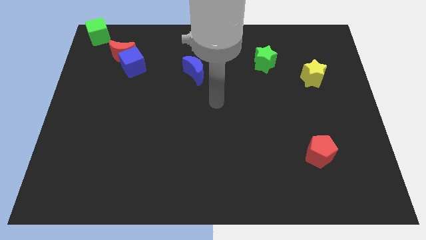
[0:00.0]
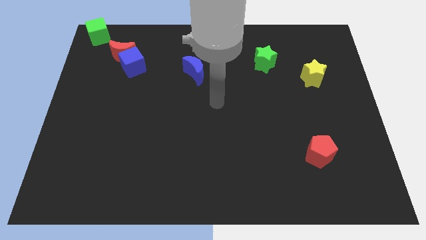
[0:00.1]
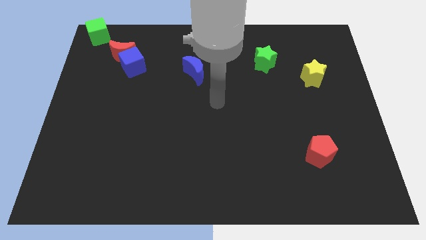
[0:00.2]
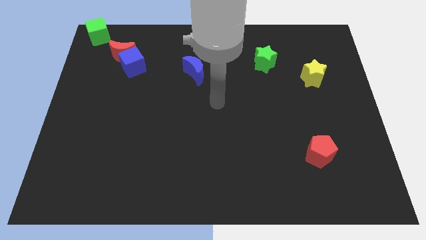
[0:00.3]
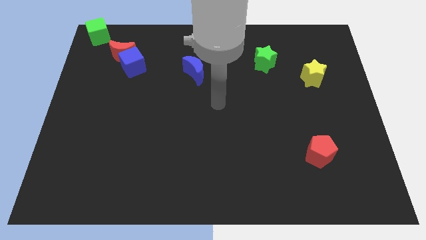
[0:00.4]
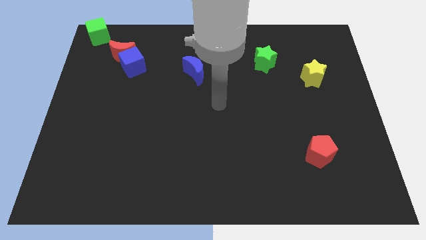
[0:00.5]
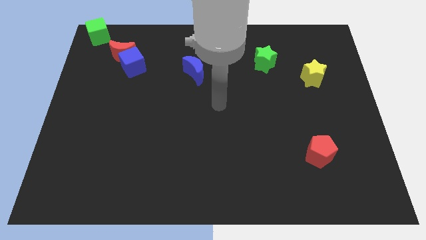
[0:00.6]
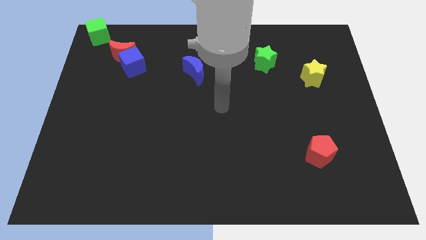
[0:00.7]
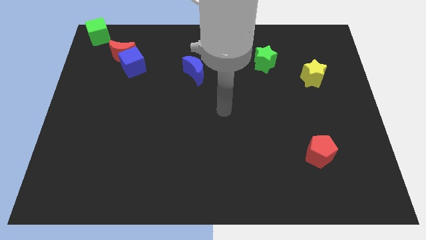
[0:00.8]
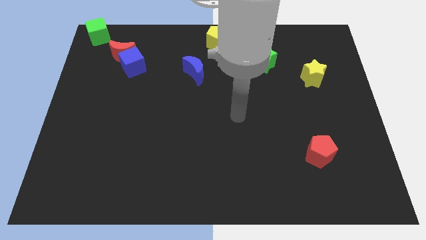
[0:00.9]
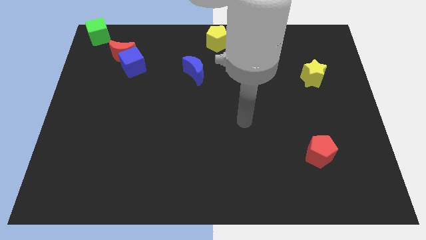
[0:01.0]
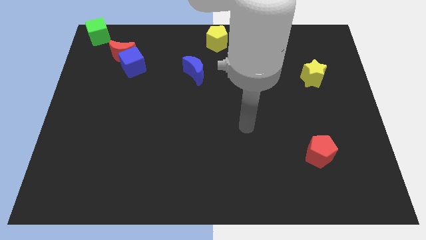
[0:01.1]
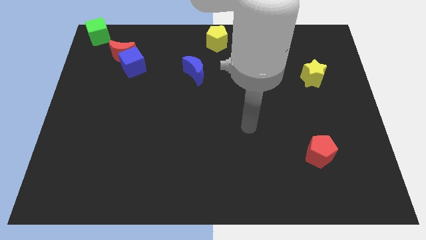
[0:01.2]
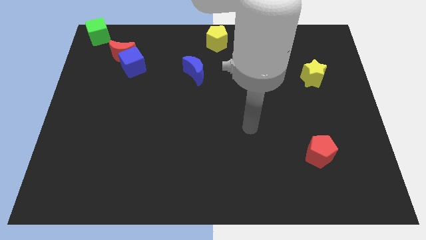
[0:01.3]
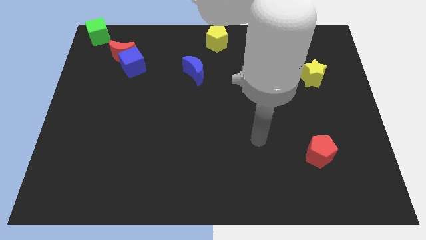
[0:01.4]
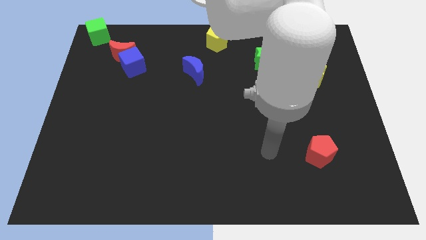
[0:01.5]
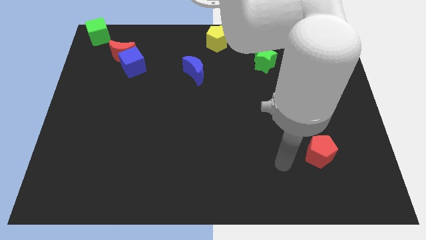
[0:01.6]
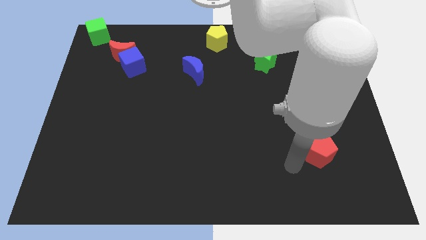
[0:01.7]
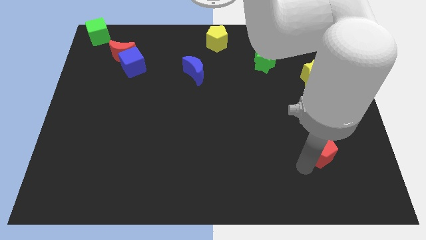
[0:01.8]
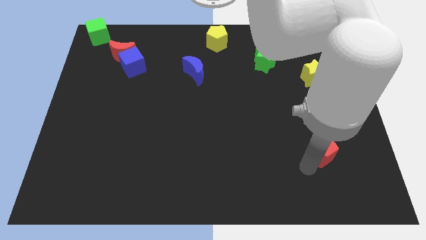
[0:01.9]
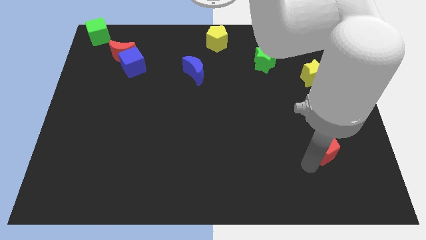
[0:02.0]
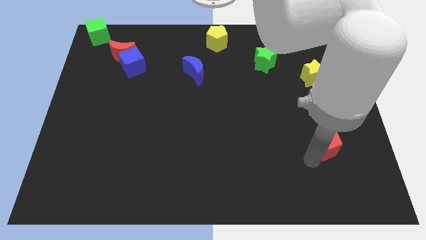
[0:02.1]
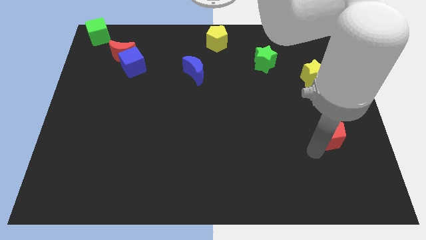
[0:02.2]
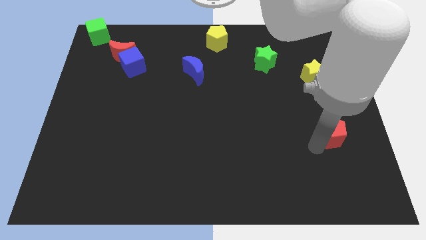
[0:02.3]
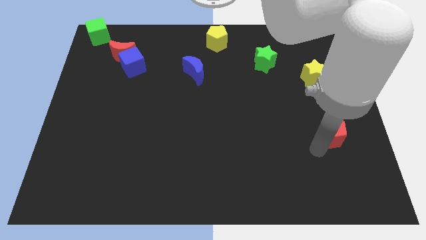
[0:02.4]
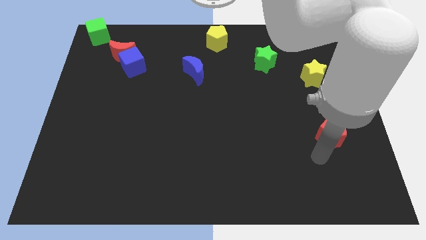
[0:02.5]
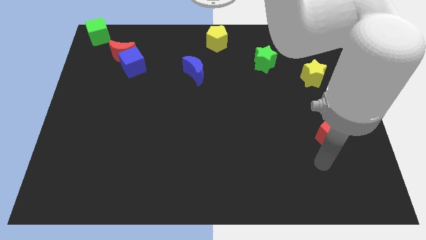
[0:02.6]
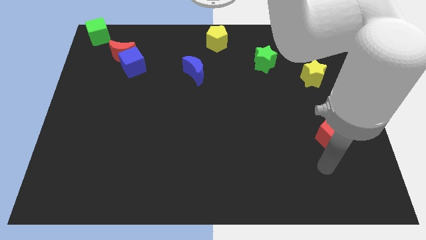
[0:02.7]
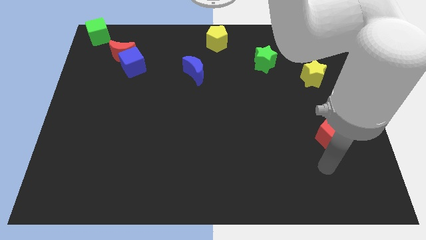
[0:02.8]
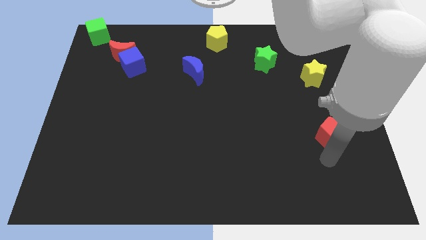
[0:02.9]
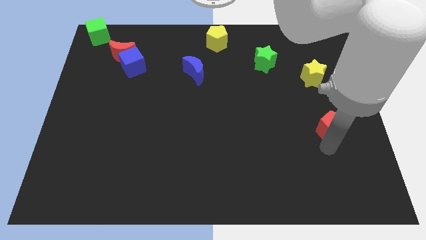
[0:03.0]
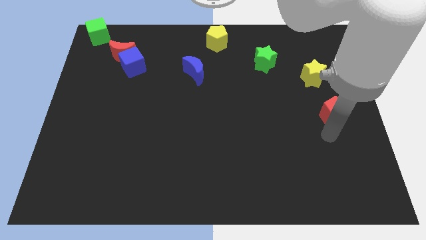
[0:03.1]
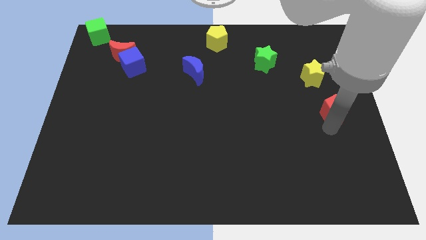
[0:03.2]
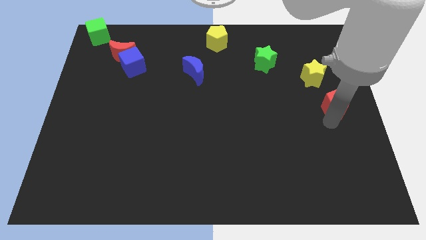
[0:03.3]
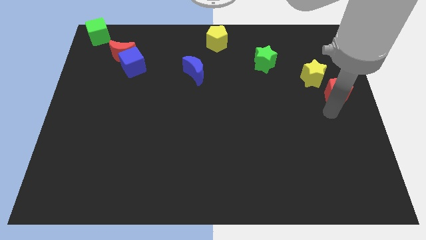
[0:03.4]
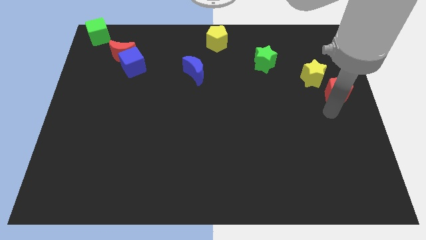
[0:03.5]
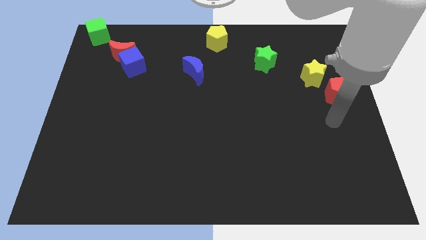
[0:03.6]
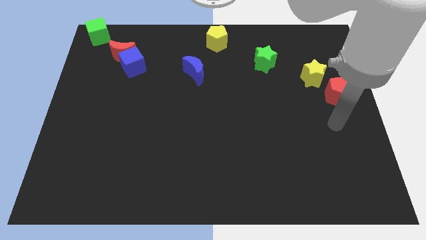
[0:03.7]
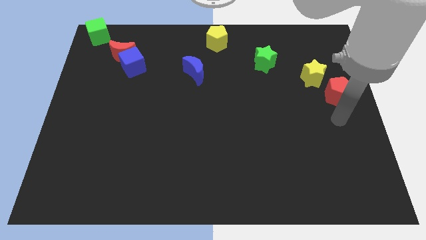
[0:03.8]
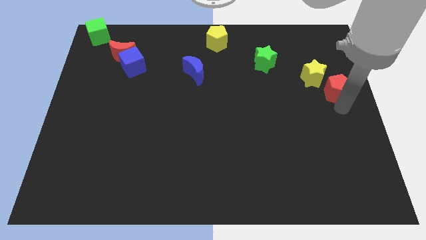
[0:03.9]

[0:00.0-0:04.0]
move the red pentagon right side of the yellow star

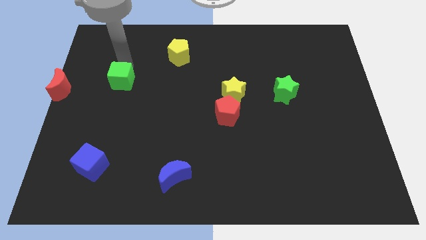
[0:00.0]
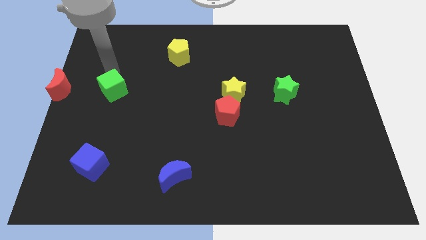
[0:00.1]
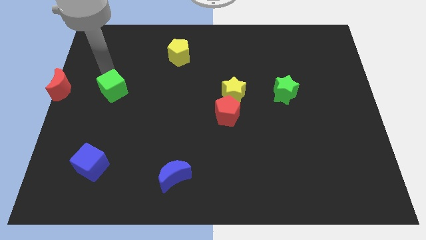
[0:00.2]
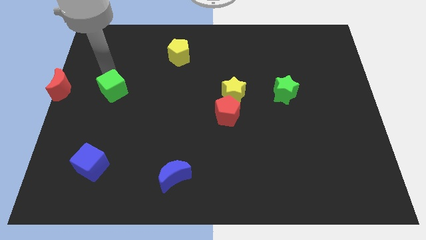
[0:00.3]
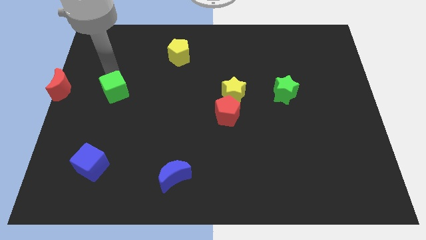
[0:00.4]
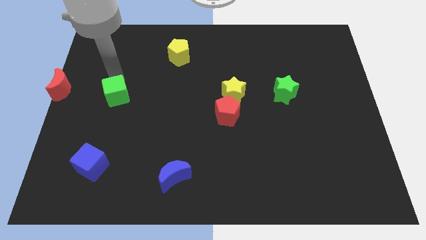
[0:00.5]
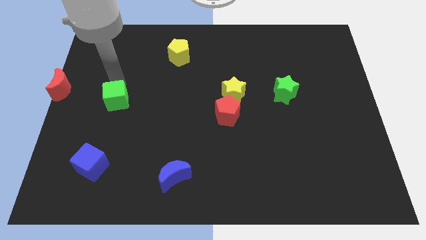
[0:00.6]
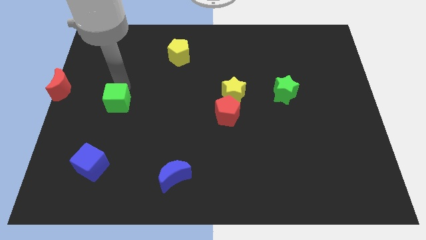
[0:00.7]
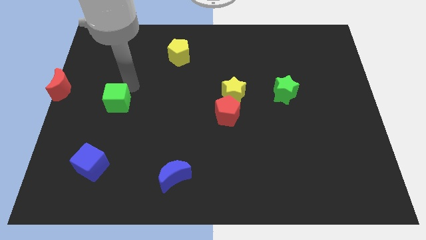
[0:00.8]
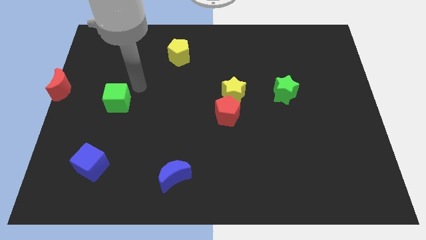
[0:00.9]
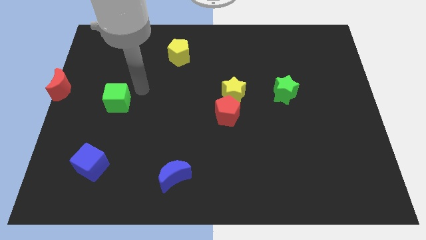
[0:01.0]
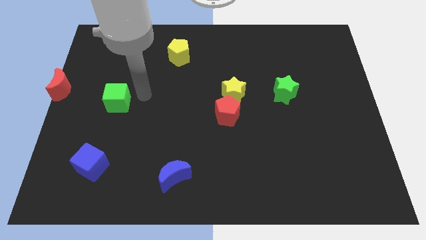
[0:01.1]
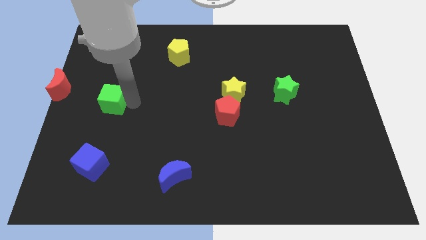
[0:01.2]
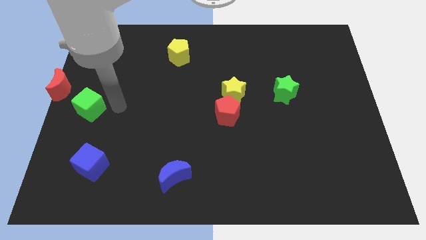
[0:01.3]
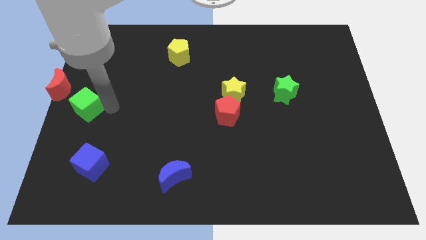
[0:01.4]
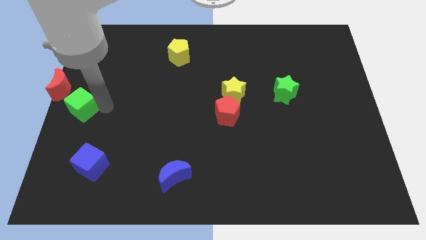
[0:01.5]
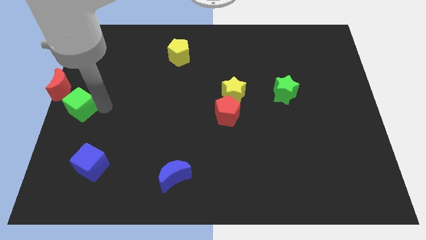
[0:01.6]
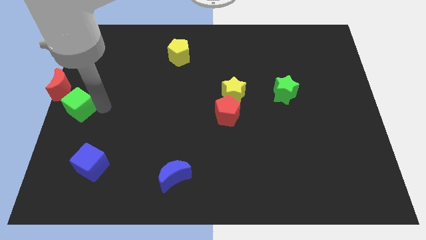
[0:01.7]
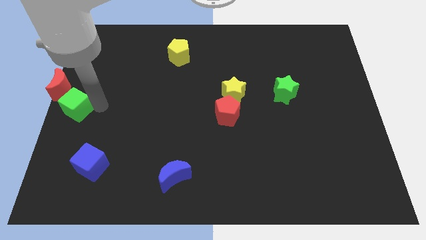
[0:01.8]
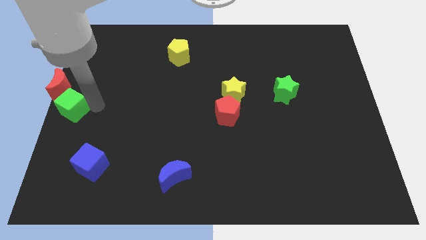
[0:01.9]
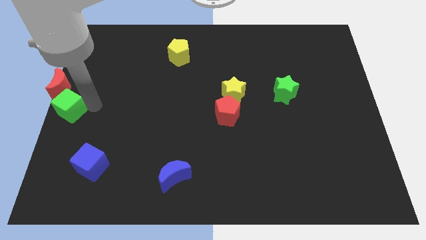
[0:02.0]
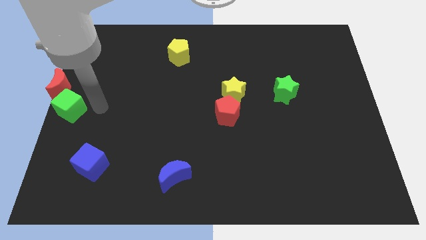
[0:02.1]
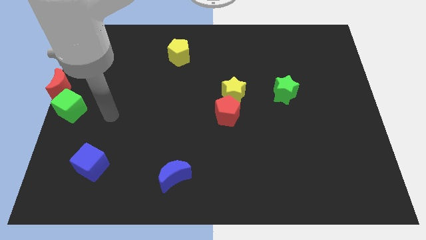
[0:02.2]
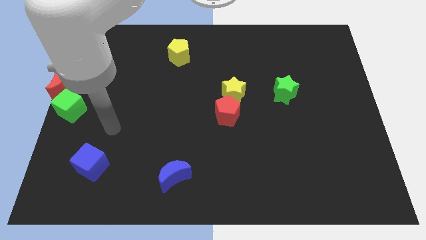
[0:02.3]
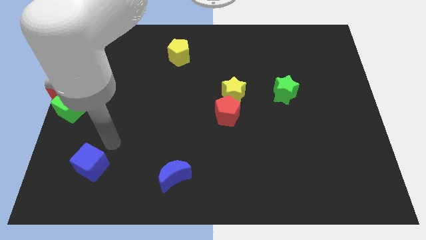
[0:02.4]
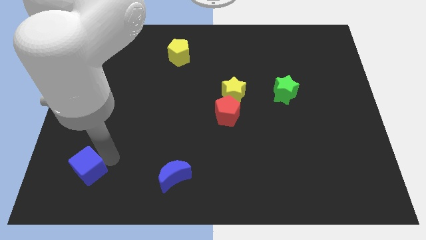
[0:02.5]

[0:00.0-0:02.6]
push green cube close to the red crescent

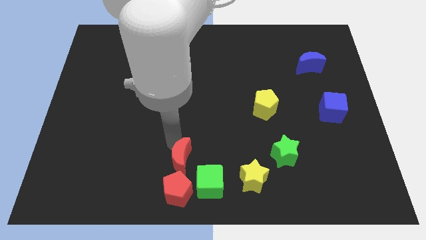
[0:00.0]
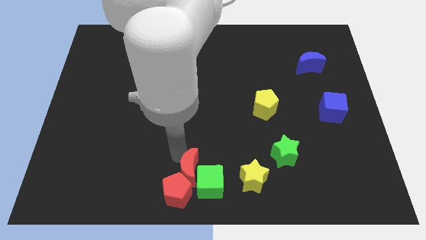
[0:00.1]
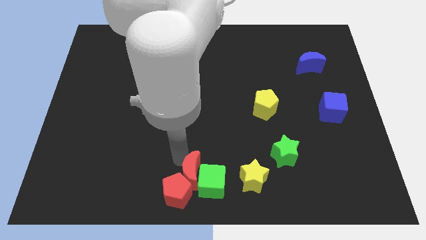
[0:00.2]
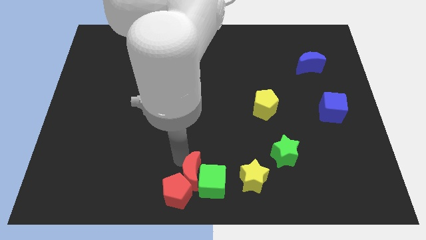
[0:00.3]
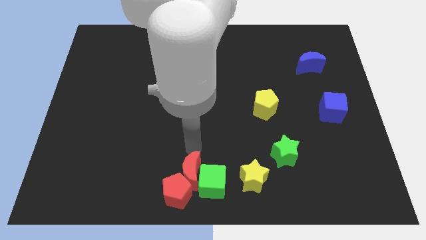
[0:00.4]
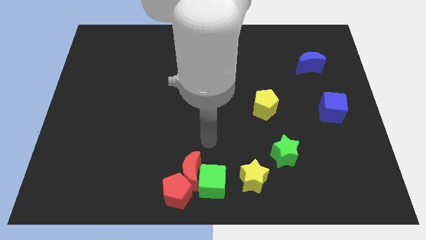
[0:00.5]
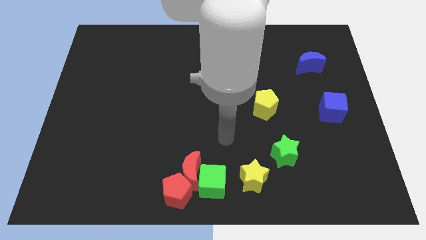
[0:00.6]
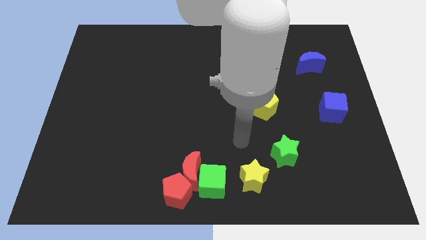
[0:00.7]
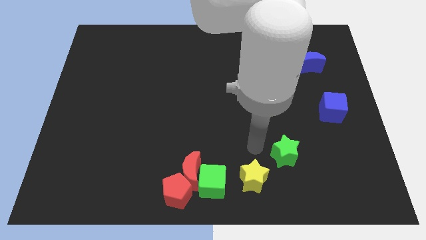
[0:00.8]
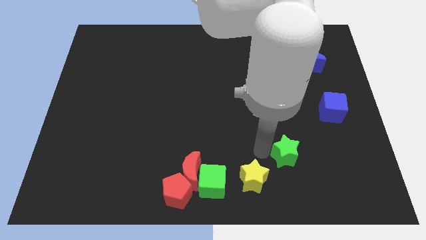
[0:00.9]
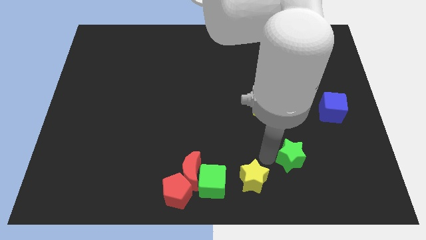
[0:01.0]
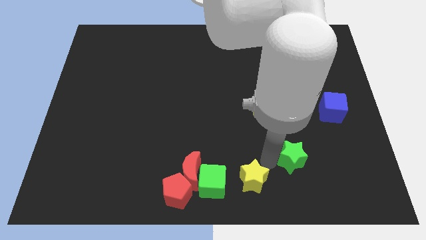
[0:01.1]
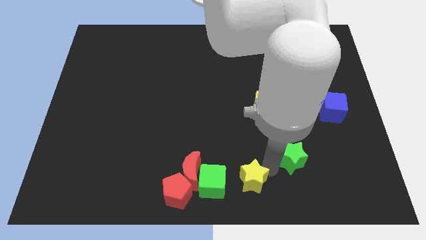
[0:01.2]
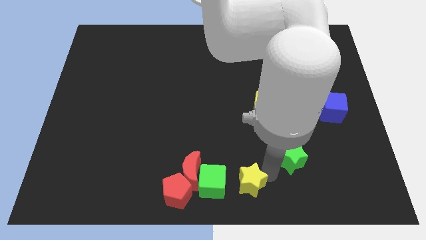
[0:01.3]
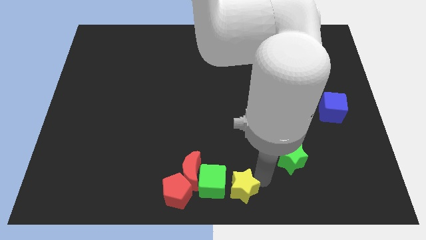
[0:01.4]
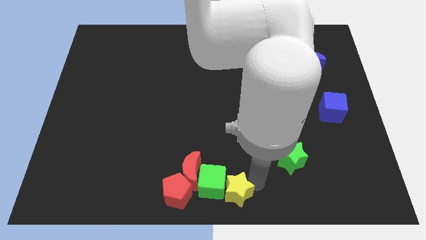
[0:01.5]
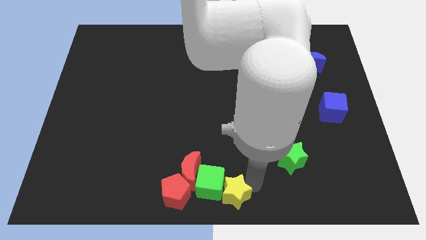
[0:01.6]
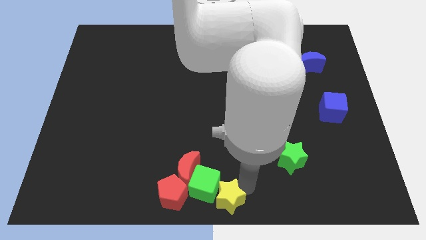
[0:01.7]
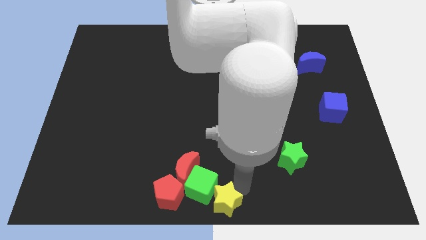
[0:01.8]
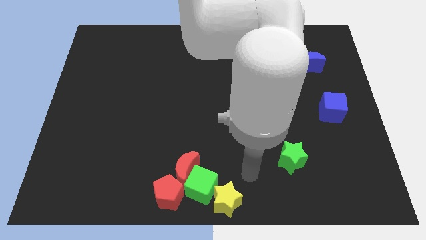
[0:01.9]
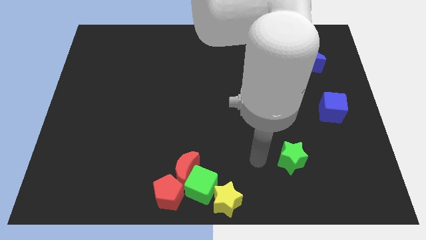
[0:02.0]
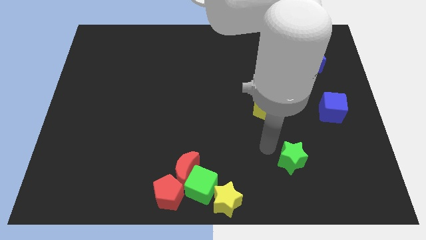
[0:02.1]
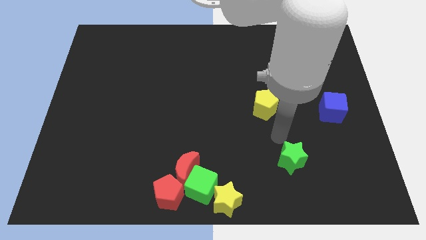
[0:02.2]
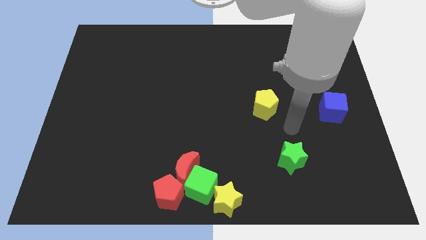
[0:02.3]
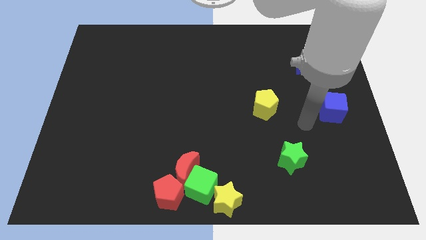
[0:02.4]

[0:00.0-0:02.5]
adjust the yellow star into the green cube from the right
